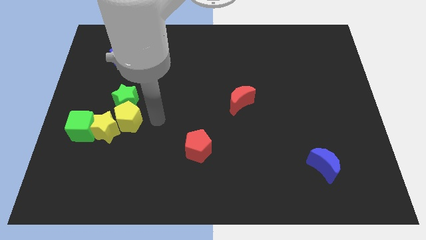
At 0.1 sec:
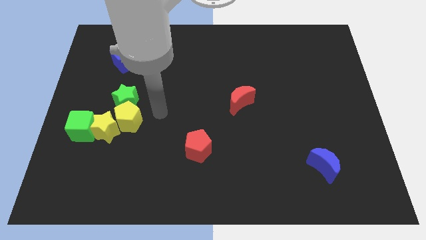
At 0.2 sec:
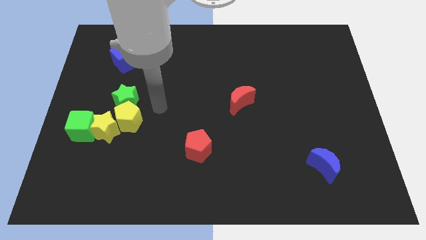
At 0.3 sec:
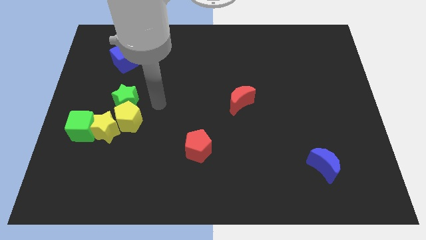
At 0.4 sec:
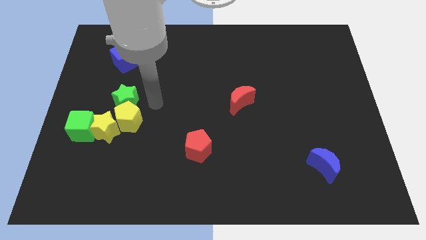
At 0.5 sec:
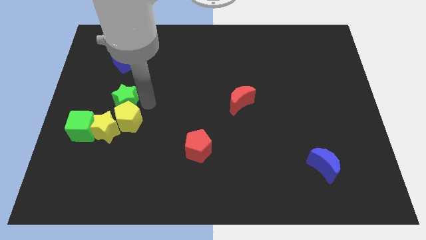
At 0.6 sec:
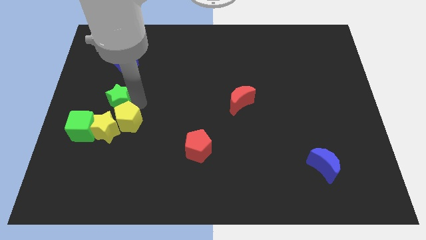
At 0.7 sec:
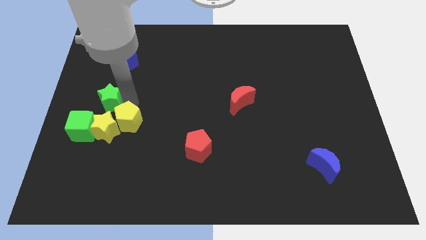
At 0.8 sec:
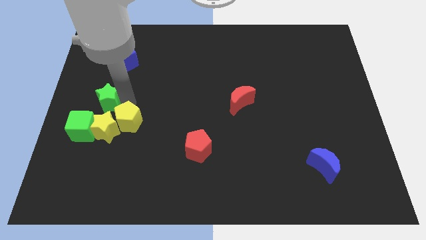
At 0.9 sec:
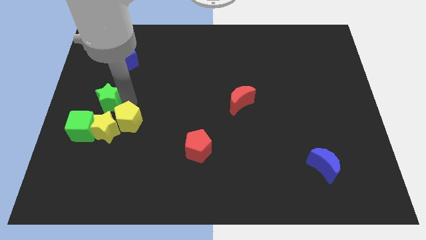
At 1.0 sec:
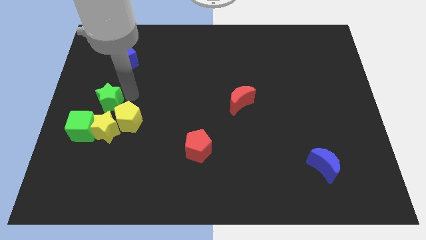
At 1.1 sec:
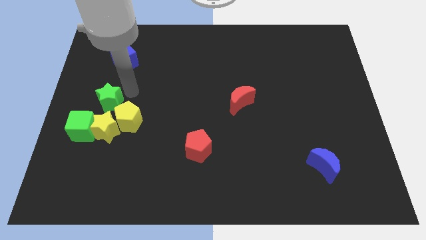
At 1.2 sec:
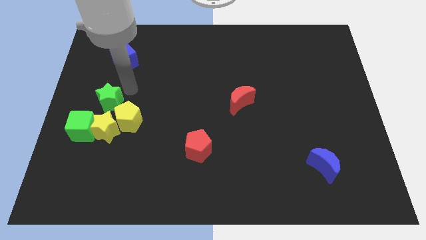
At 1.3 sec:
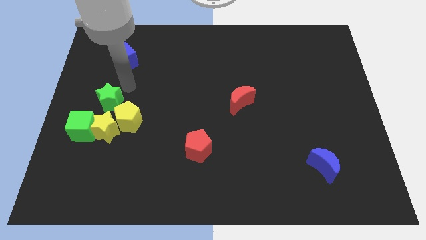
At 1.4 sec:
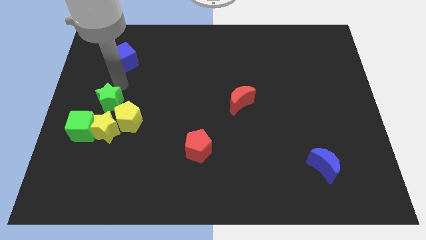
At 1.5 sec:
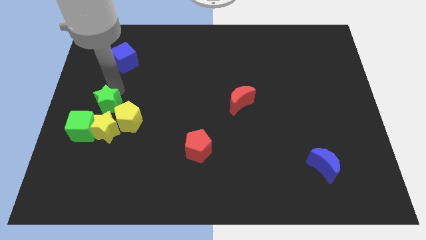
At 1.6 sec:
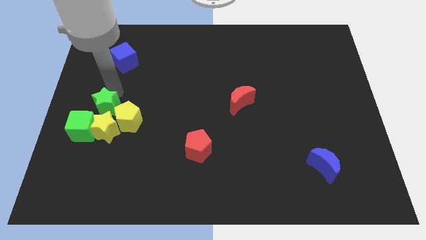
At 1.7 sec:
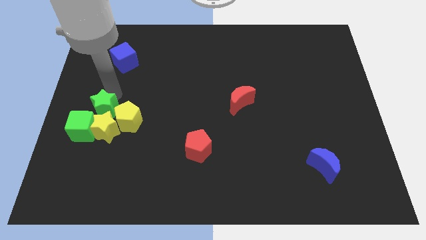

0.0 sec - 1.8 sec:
push the green star towards the top of the yellow star

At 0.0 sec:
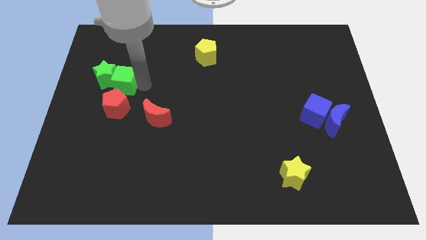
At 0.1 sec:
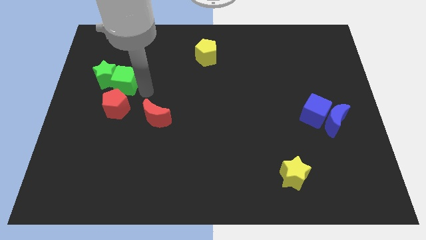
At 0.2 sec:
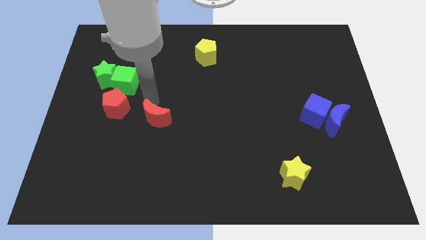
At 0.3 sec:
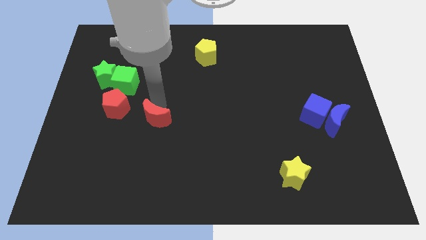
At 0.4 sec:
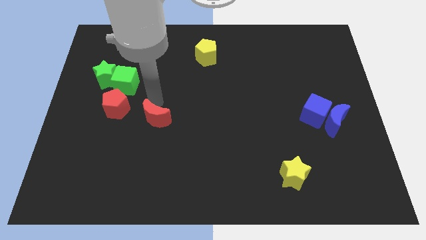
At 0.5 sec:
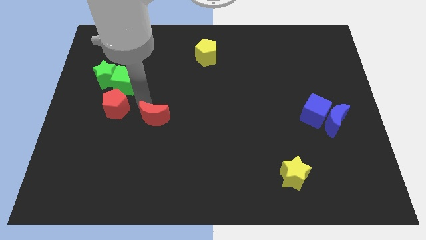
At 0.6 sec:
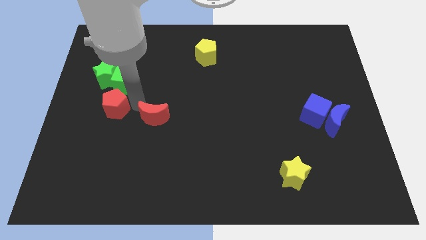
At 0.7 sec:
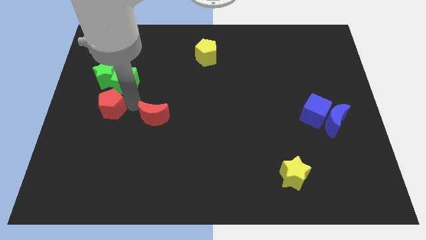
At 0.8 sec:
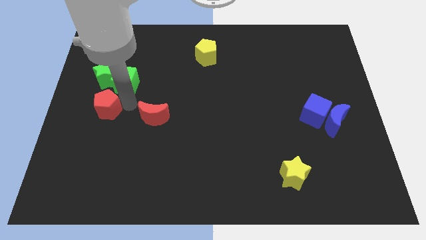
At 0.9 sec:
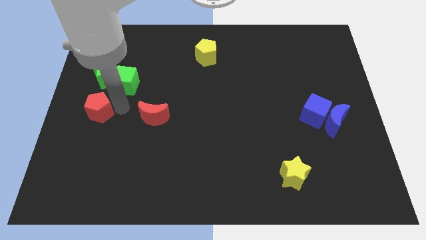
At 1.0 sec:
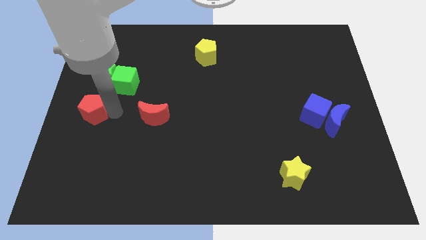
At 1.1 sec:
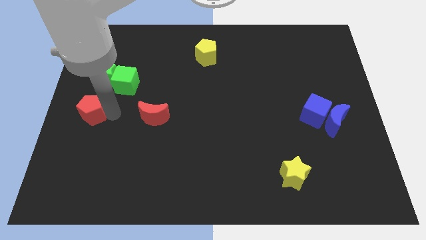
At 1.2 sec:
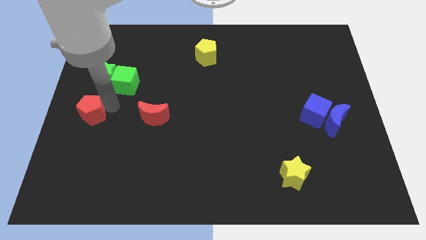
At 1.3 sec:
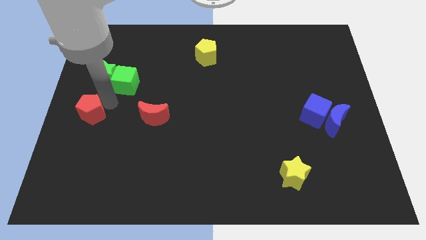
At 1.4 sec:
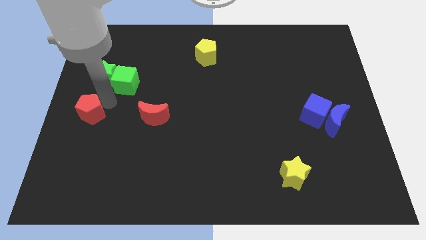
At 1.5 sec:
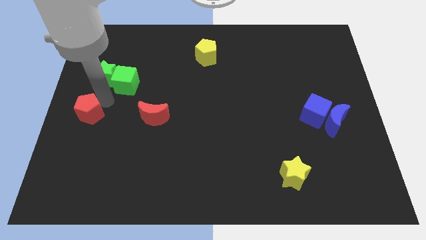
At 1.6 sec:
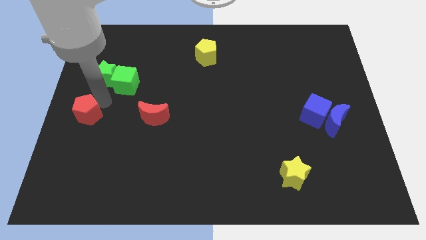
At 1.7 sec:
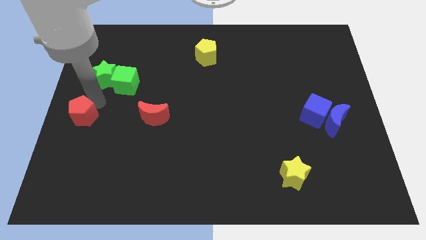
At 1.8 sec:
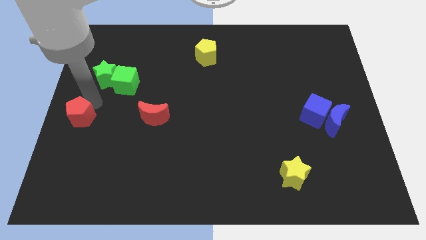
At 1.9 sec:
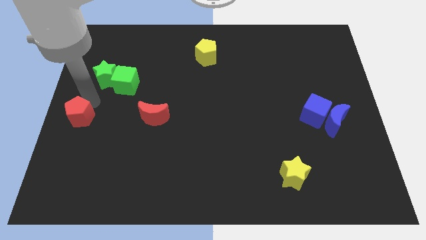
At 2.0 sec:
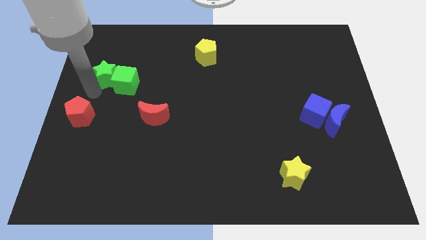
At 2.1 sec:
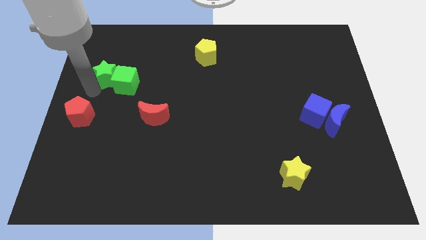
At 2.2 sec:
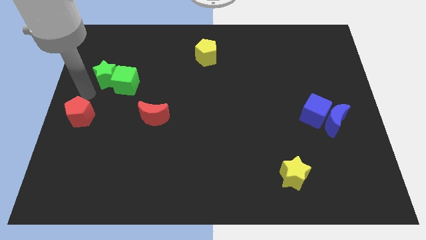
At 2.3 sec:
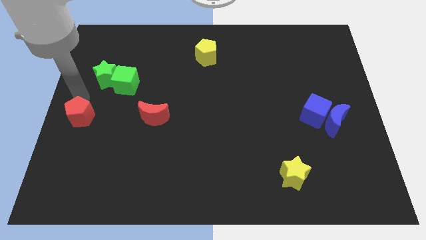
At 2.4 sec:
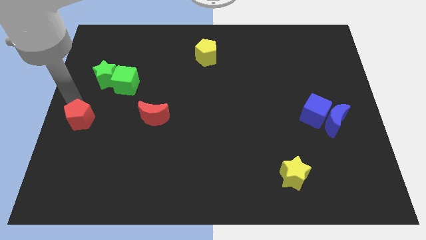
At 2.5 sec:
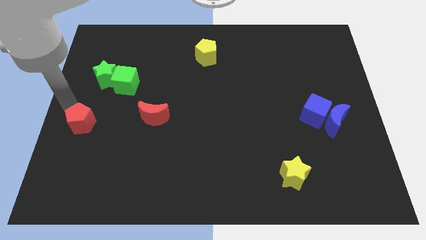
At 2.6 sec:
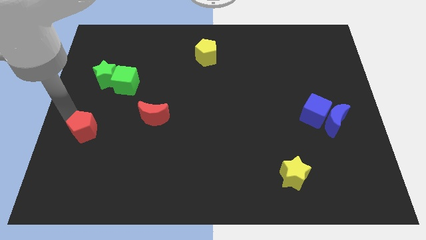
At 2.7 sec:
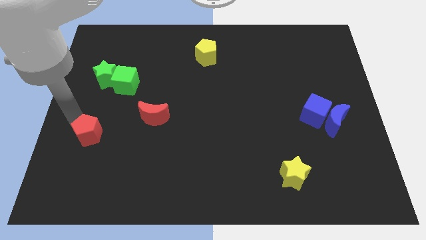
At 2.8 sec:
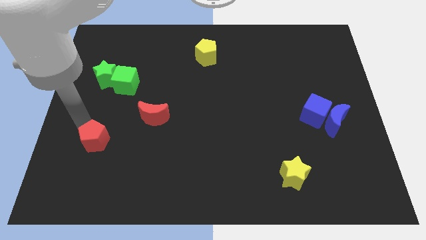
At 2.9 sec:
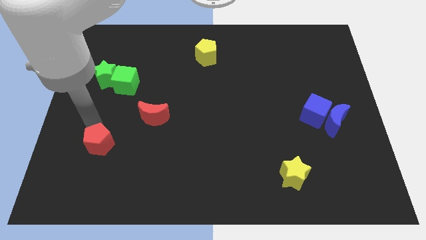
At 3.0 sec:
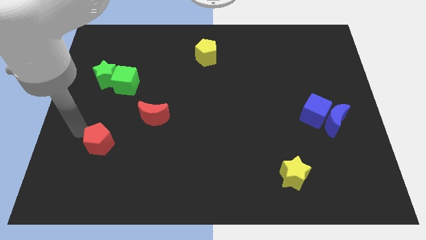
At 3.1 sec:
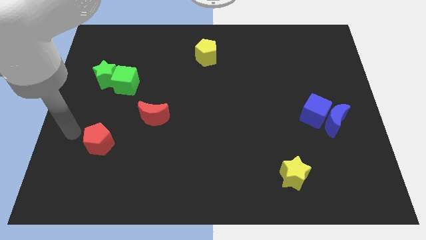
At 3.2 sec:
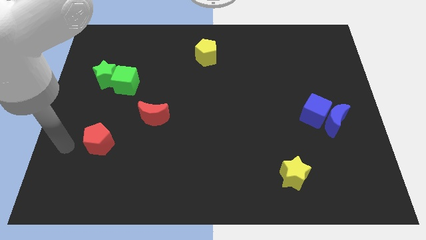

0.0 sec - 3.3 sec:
move the red pentagon below green blocks

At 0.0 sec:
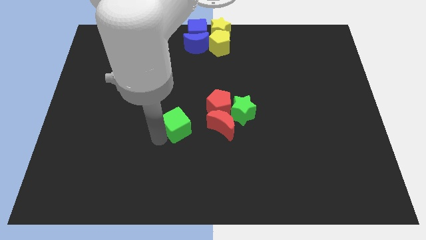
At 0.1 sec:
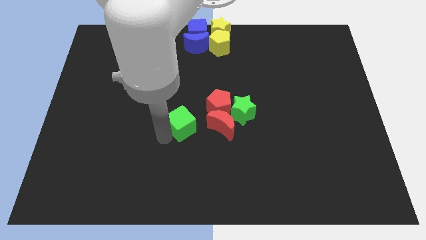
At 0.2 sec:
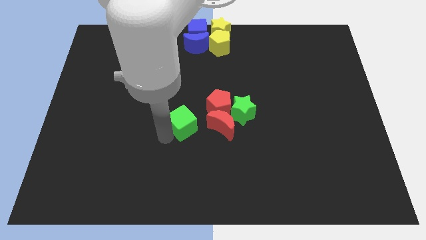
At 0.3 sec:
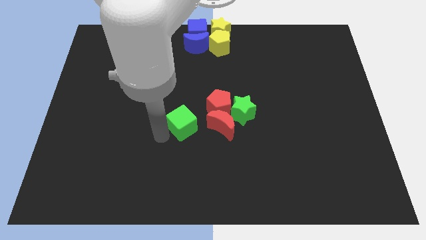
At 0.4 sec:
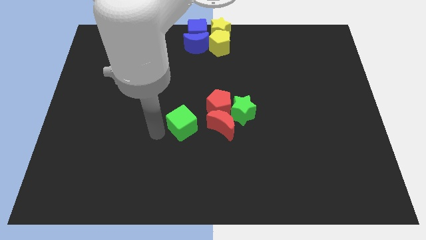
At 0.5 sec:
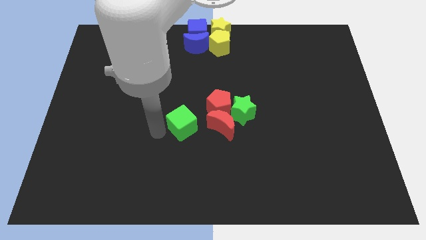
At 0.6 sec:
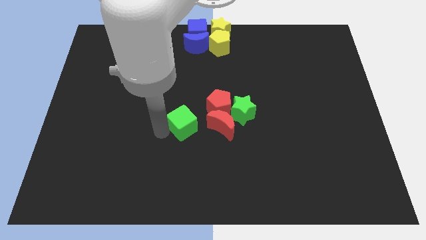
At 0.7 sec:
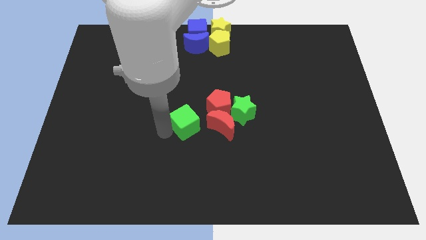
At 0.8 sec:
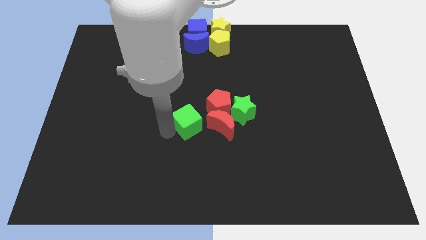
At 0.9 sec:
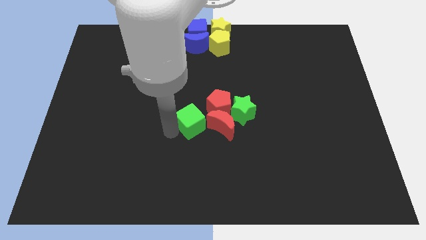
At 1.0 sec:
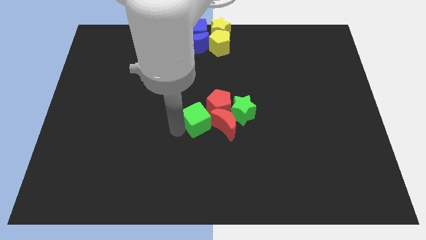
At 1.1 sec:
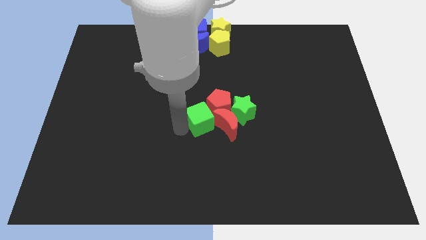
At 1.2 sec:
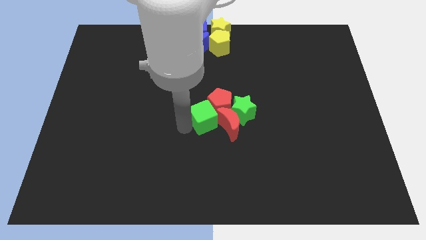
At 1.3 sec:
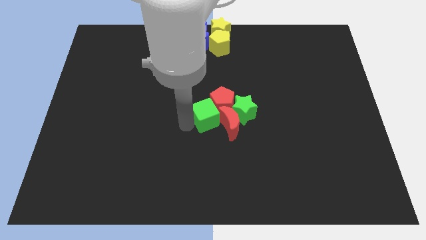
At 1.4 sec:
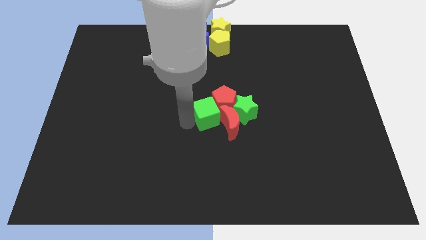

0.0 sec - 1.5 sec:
push the green cube into the red blocks

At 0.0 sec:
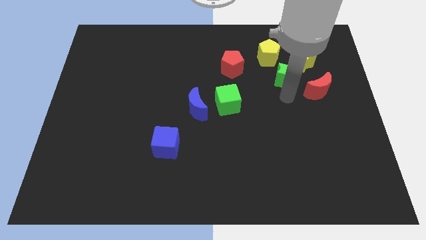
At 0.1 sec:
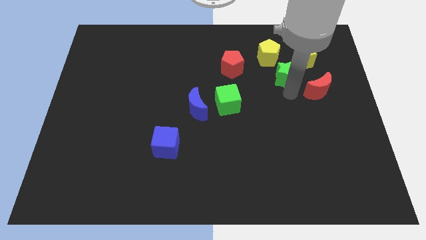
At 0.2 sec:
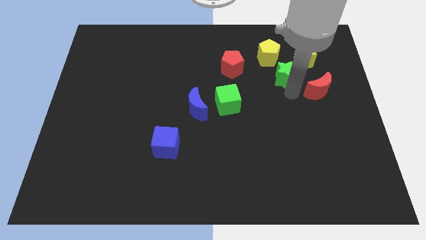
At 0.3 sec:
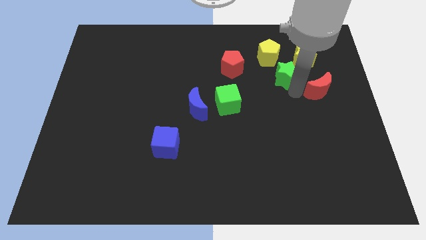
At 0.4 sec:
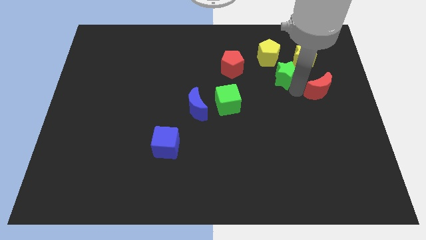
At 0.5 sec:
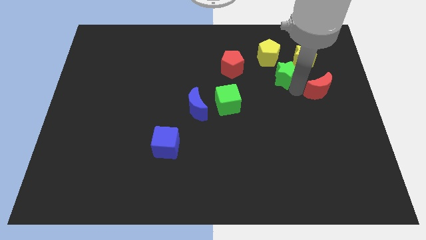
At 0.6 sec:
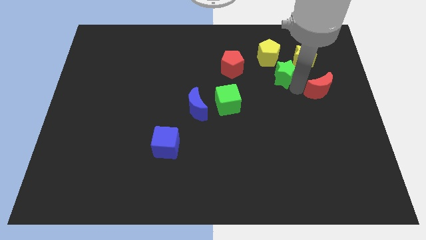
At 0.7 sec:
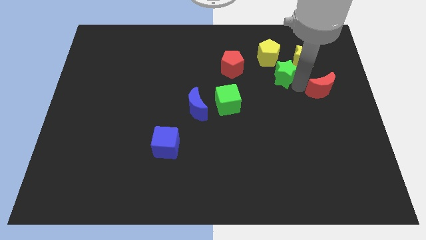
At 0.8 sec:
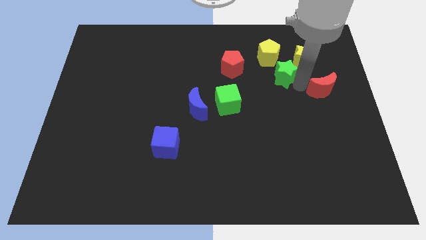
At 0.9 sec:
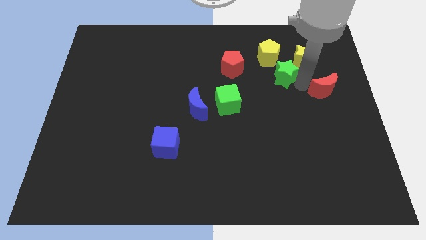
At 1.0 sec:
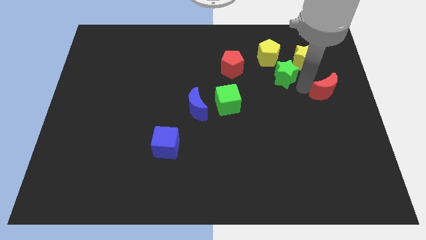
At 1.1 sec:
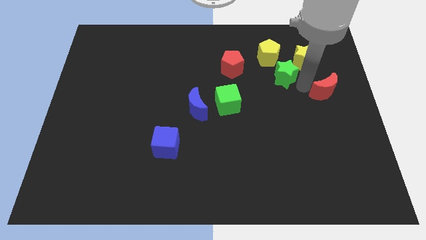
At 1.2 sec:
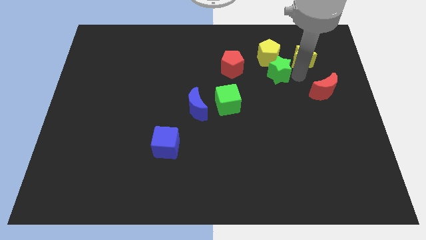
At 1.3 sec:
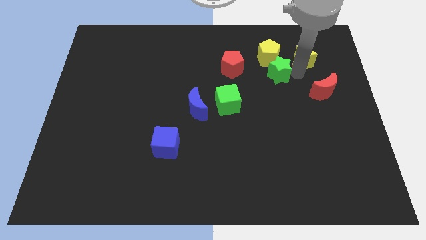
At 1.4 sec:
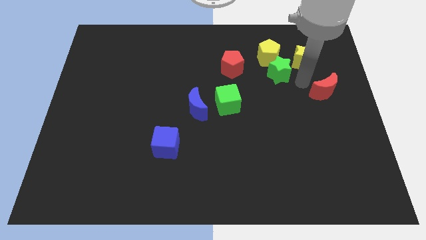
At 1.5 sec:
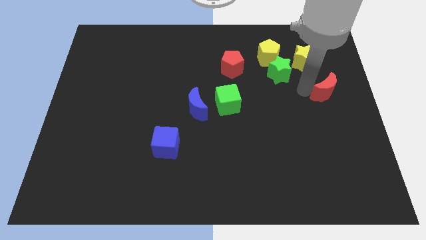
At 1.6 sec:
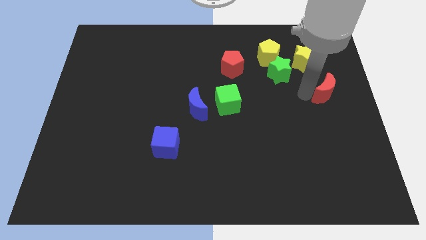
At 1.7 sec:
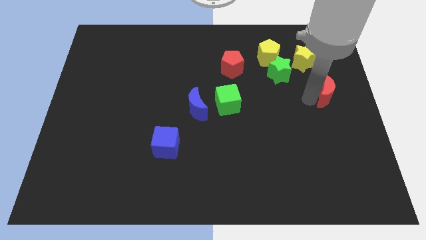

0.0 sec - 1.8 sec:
push the green star close to the yellow pentagon

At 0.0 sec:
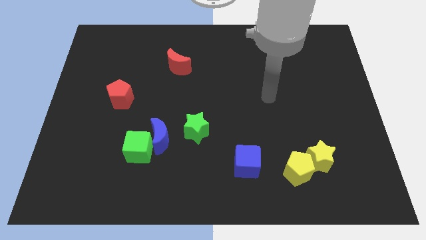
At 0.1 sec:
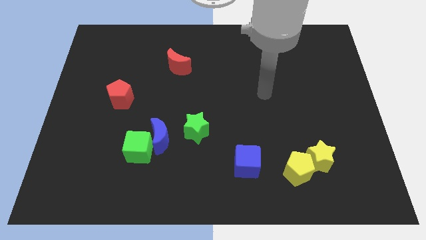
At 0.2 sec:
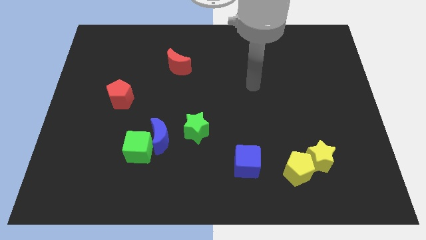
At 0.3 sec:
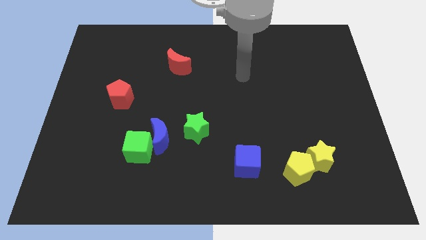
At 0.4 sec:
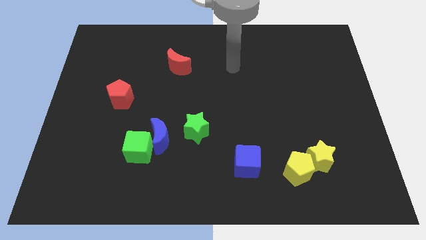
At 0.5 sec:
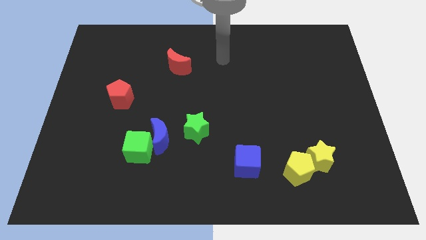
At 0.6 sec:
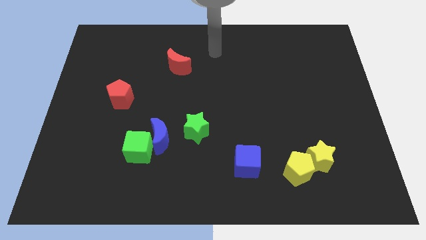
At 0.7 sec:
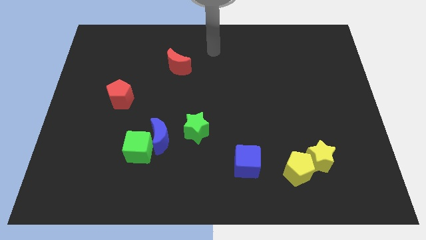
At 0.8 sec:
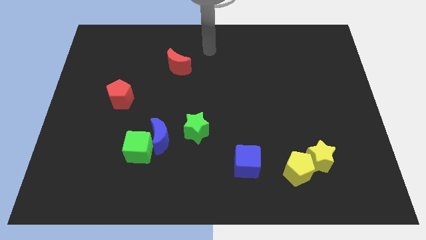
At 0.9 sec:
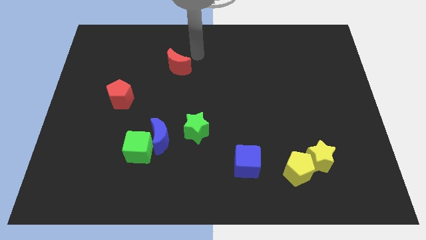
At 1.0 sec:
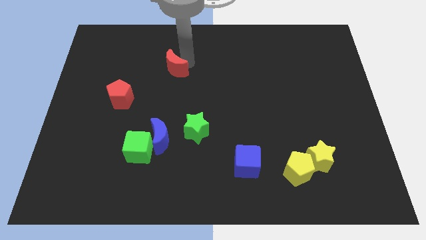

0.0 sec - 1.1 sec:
move your arm towards the red crescent
